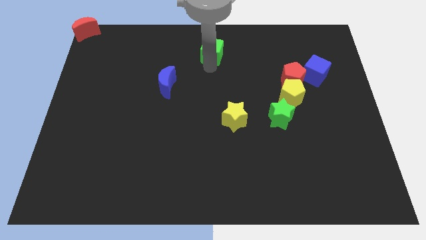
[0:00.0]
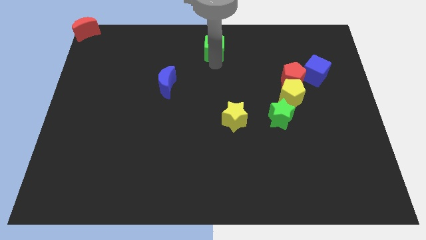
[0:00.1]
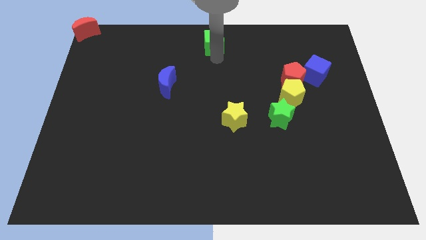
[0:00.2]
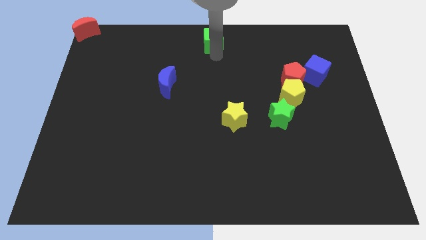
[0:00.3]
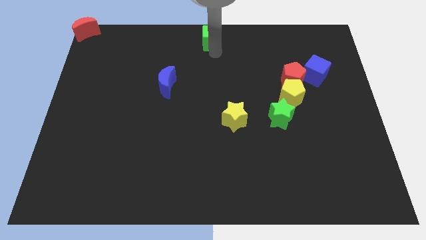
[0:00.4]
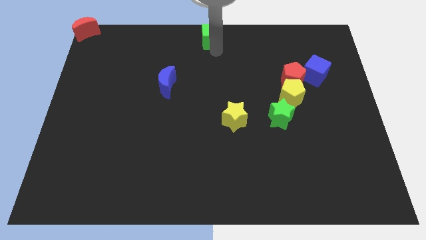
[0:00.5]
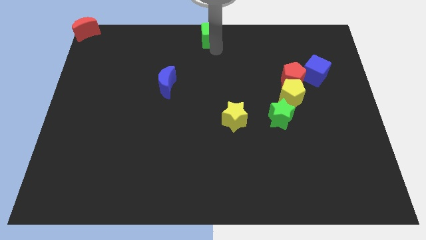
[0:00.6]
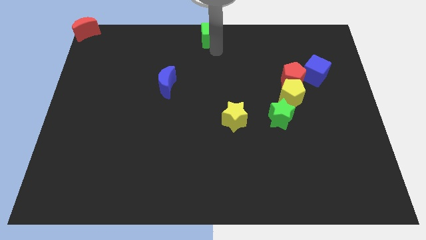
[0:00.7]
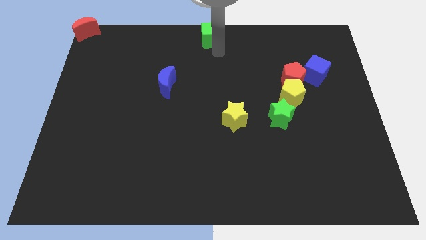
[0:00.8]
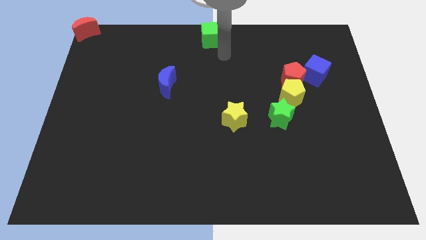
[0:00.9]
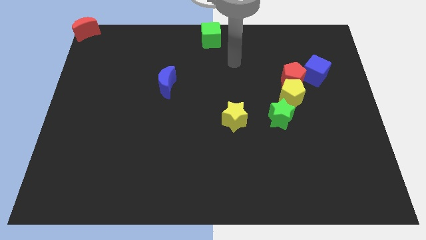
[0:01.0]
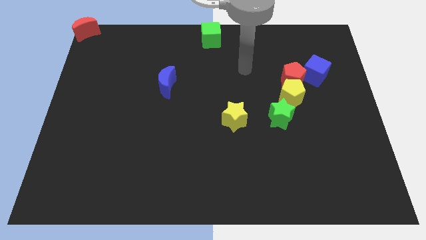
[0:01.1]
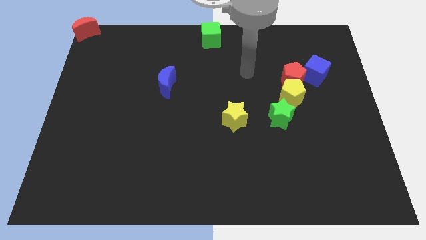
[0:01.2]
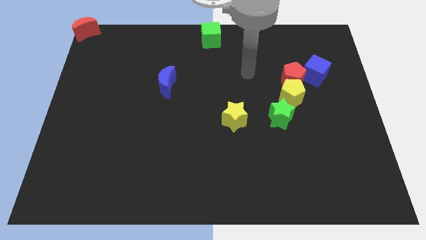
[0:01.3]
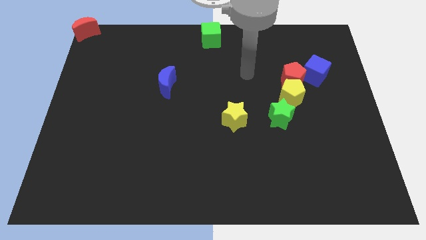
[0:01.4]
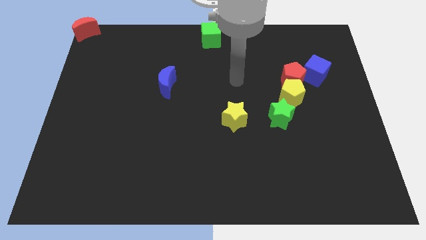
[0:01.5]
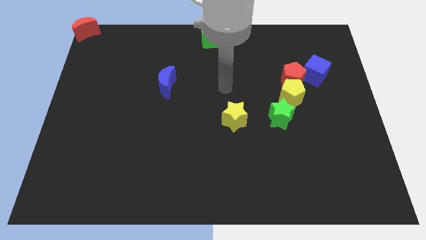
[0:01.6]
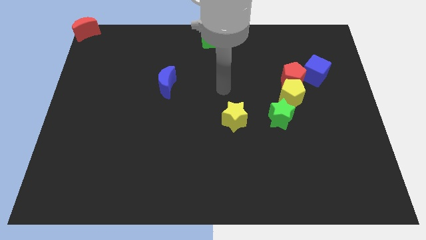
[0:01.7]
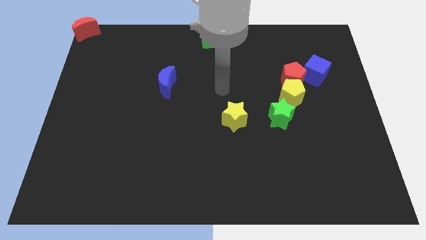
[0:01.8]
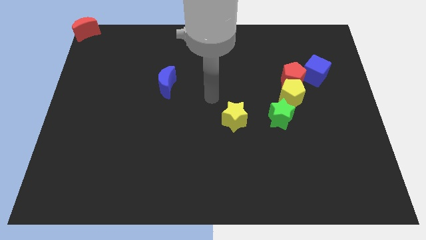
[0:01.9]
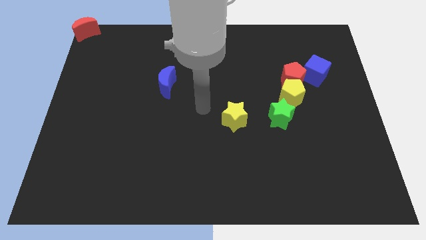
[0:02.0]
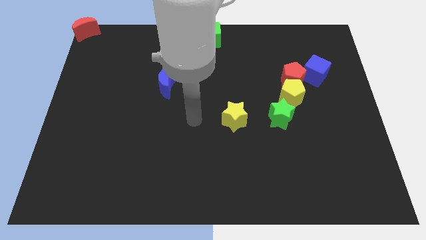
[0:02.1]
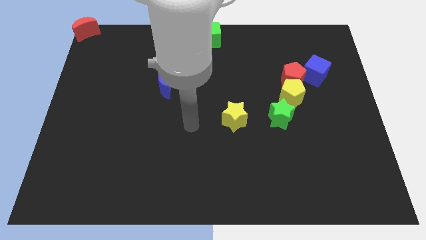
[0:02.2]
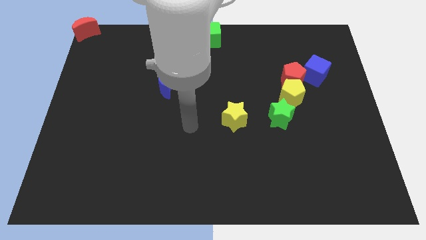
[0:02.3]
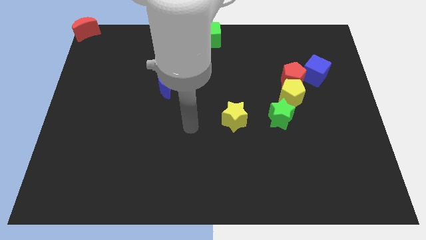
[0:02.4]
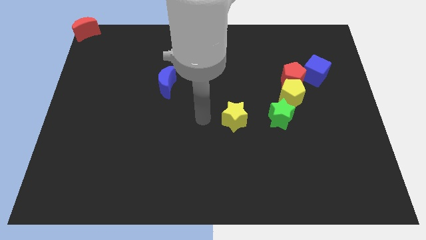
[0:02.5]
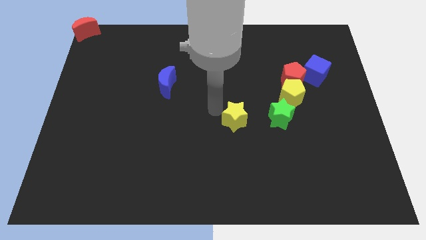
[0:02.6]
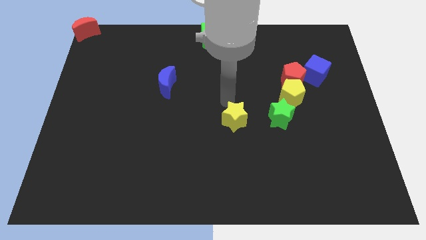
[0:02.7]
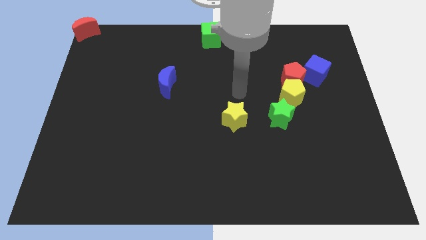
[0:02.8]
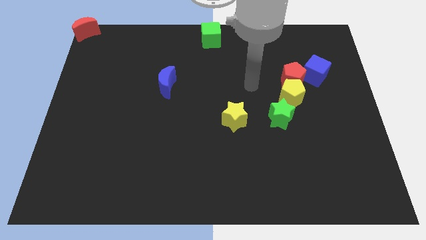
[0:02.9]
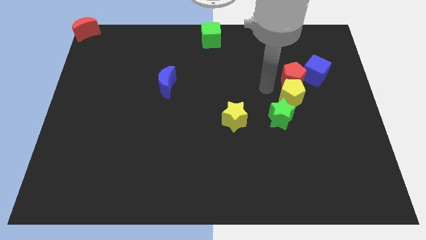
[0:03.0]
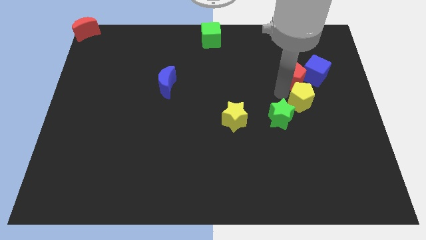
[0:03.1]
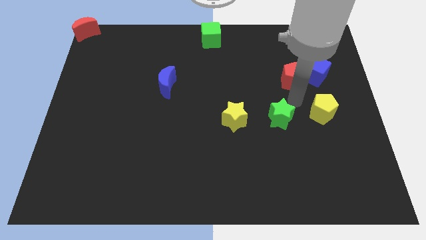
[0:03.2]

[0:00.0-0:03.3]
move the yellow pentagone towards the center right side of the board

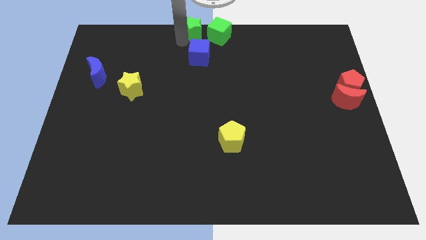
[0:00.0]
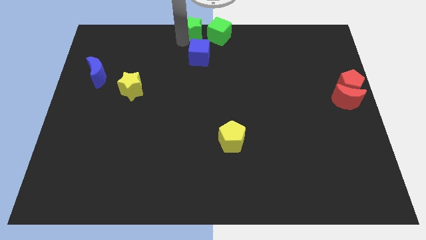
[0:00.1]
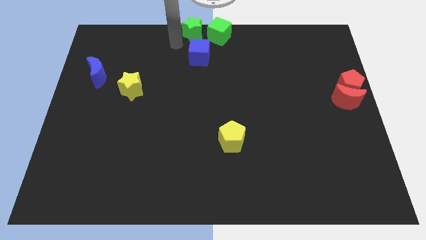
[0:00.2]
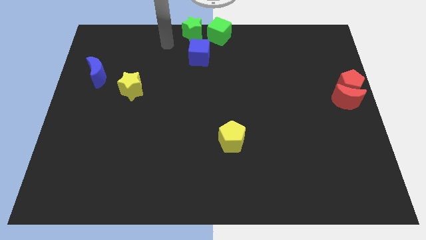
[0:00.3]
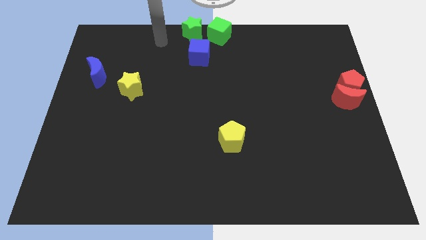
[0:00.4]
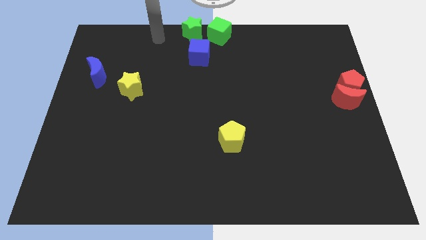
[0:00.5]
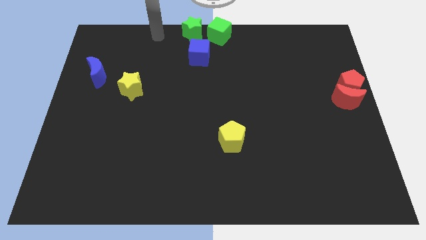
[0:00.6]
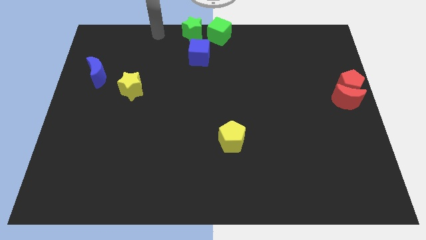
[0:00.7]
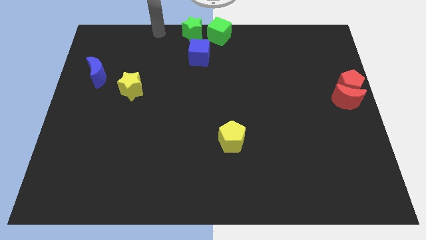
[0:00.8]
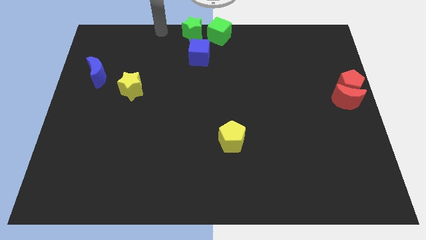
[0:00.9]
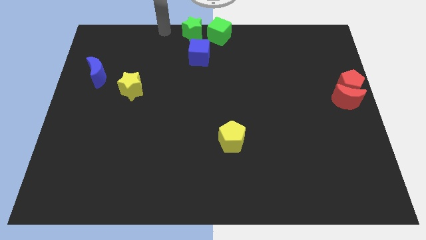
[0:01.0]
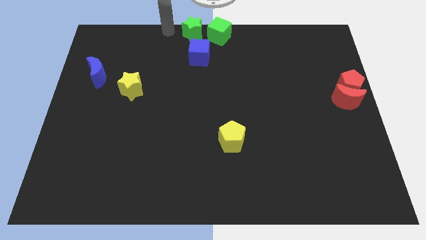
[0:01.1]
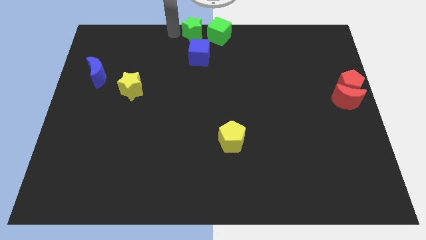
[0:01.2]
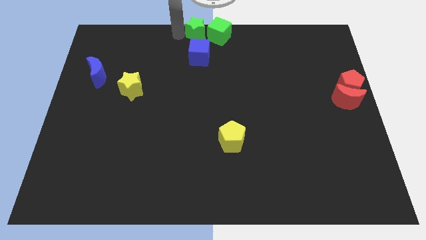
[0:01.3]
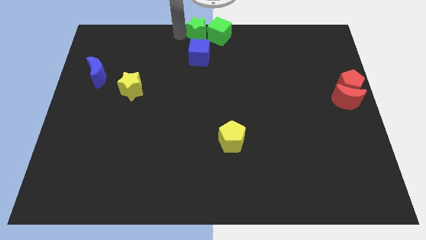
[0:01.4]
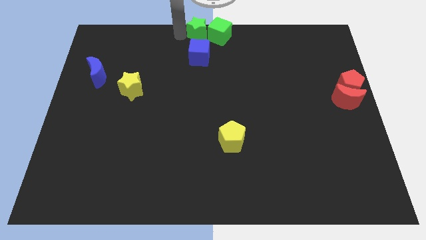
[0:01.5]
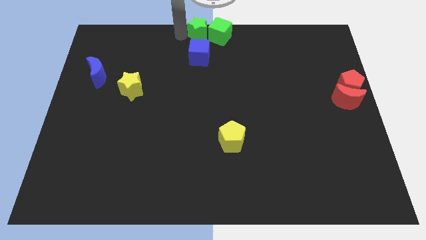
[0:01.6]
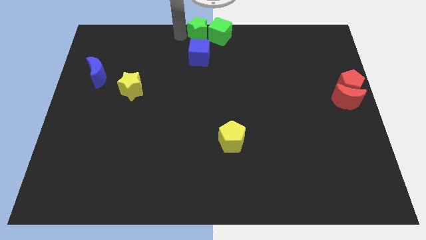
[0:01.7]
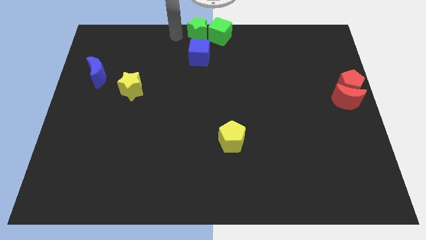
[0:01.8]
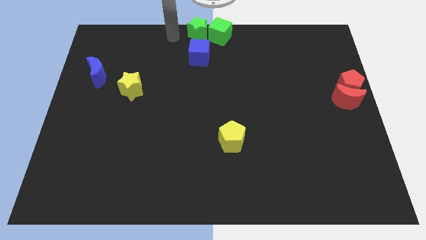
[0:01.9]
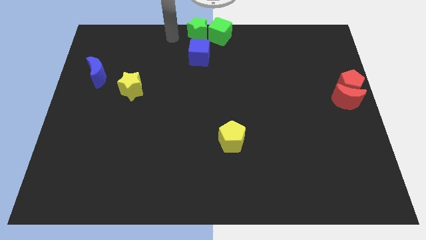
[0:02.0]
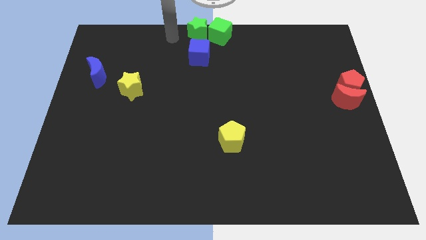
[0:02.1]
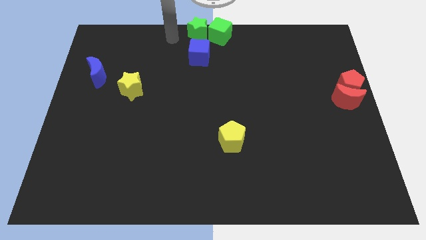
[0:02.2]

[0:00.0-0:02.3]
push the green star into the green cube

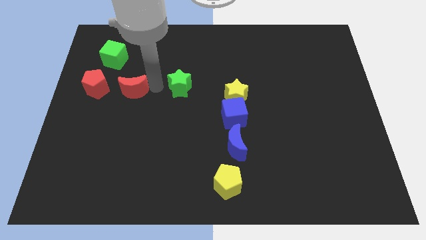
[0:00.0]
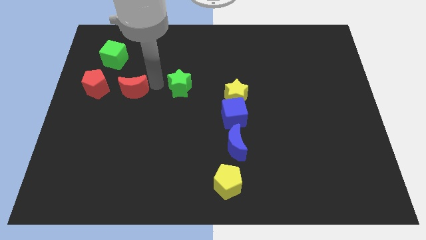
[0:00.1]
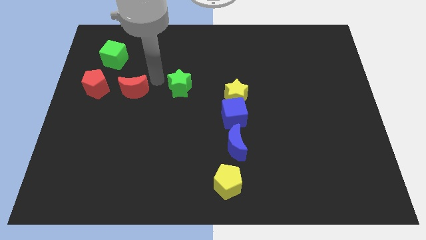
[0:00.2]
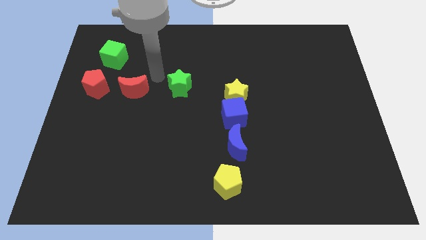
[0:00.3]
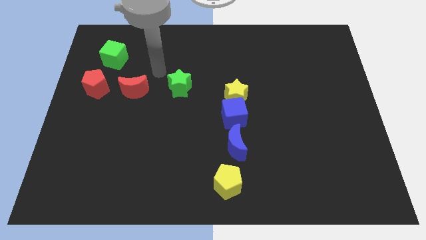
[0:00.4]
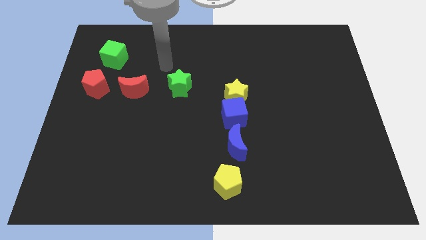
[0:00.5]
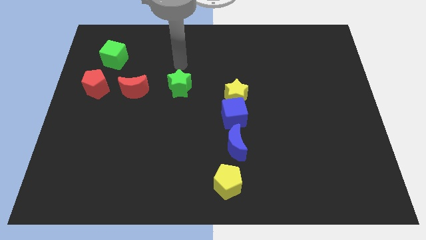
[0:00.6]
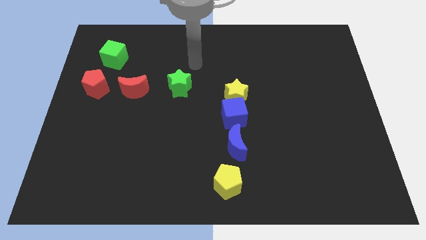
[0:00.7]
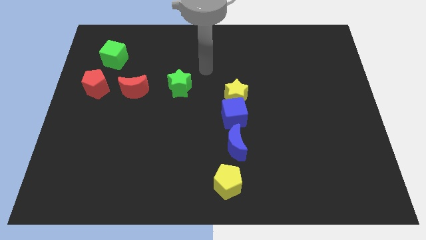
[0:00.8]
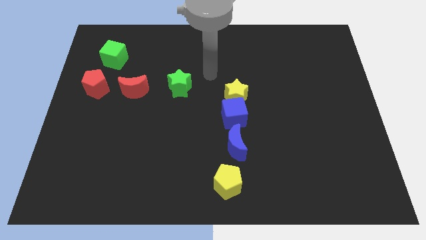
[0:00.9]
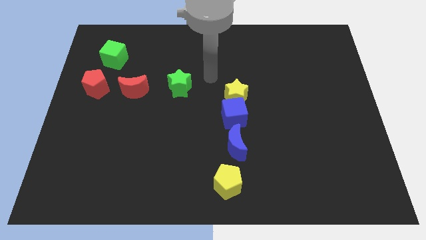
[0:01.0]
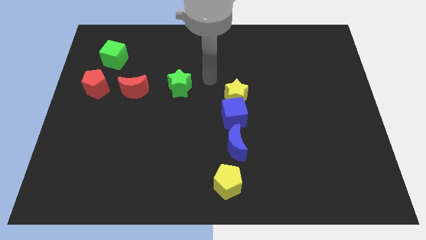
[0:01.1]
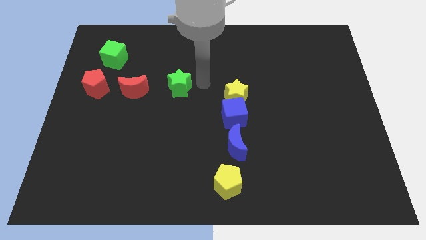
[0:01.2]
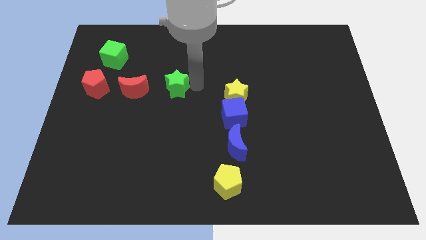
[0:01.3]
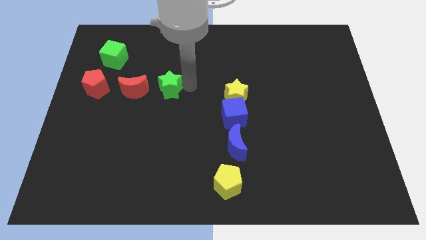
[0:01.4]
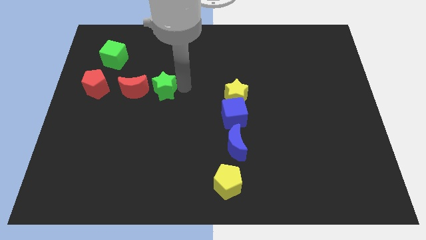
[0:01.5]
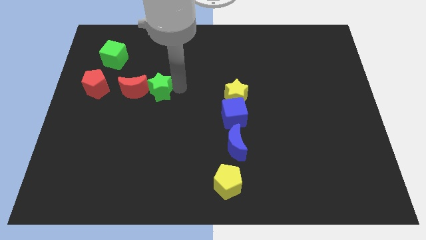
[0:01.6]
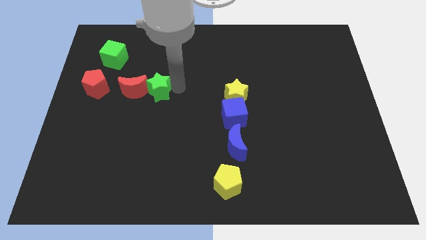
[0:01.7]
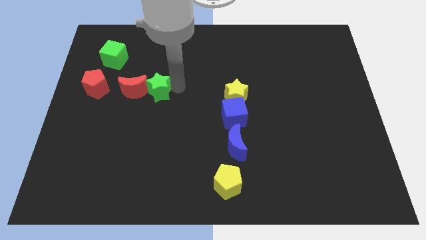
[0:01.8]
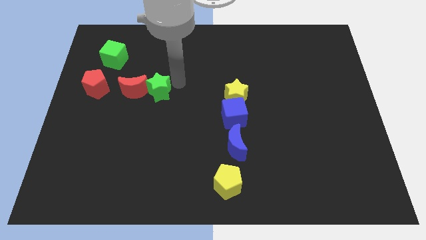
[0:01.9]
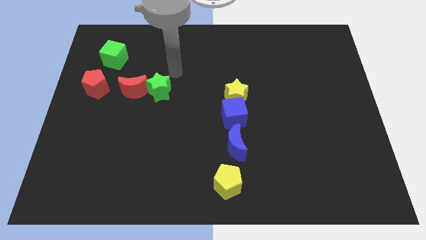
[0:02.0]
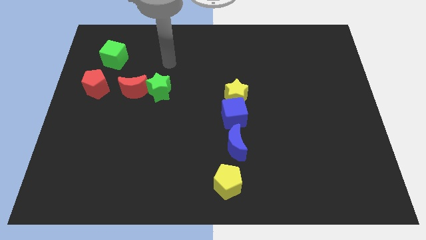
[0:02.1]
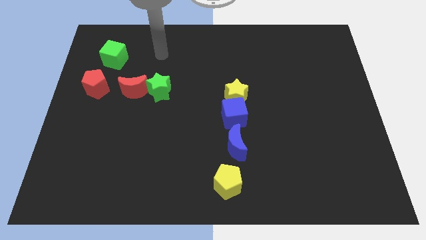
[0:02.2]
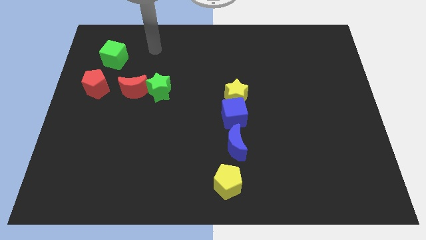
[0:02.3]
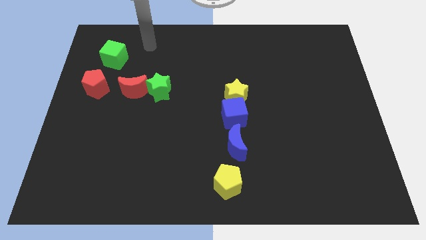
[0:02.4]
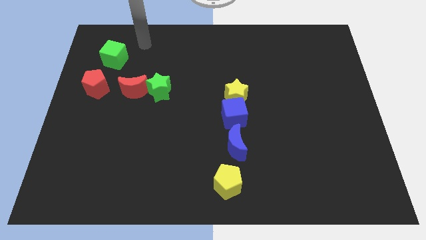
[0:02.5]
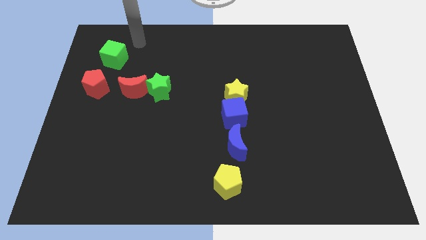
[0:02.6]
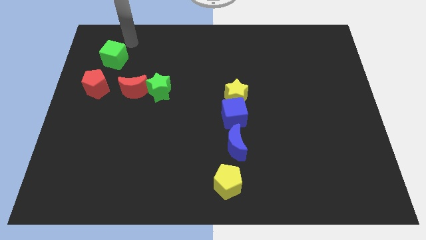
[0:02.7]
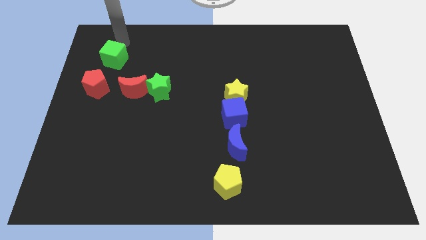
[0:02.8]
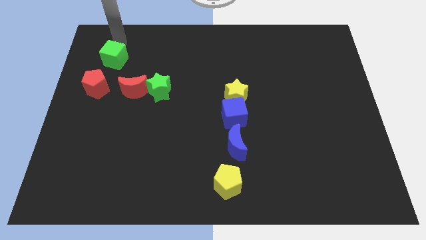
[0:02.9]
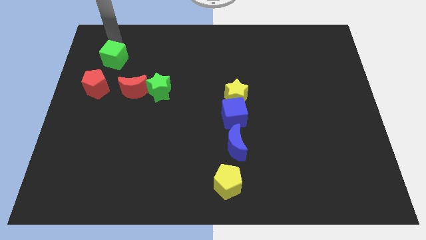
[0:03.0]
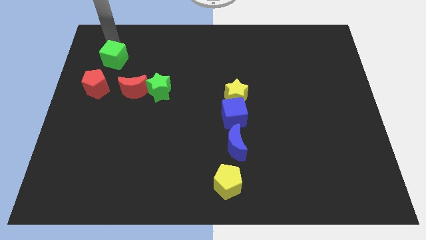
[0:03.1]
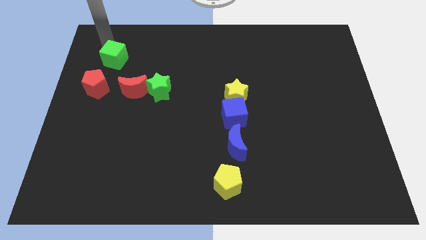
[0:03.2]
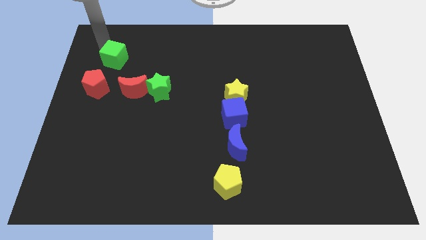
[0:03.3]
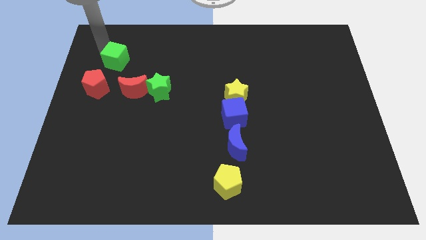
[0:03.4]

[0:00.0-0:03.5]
move your arm to the green cube
